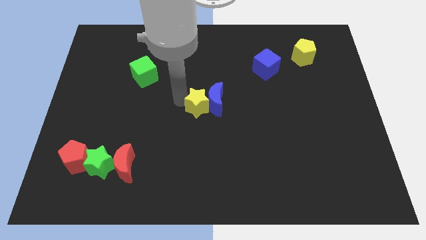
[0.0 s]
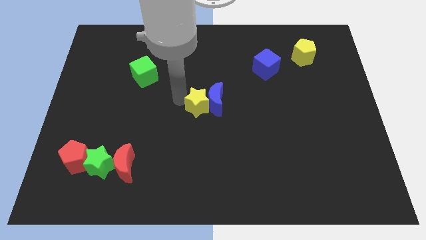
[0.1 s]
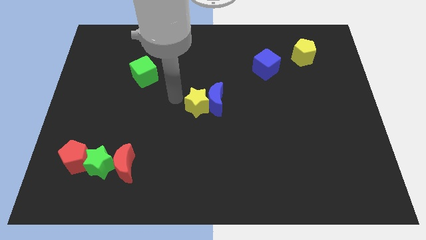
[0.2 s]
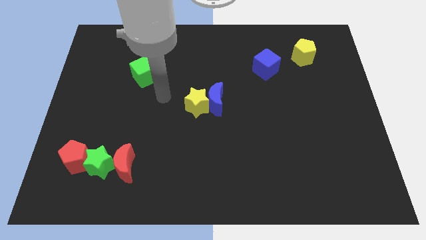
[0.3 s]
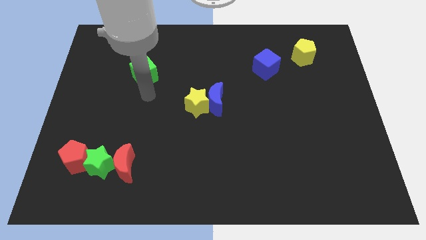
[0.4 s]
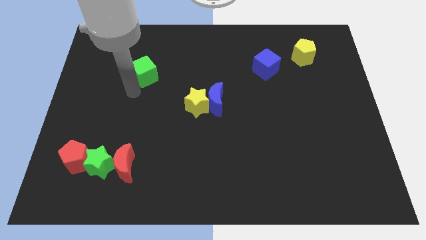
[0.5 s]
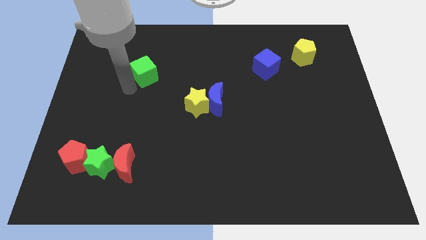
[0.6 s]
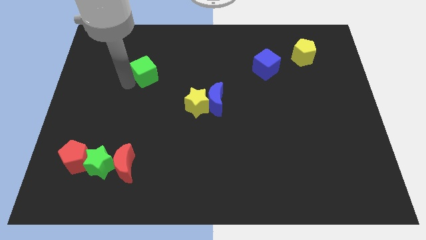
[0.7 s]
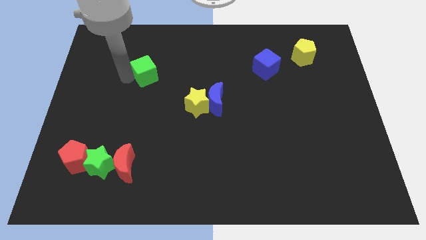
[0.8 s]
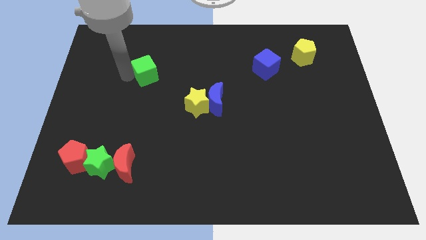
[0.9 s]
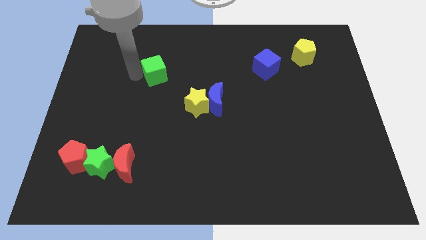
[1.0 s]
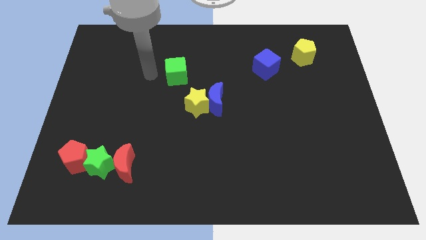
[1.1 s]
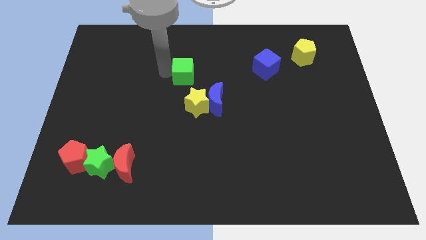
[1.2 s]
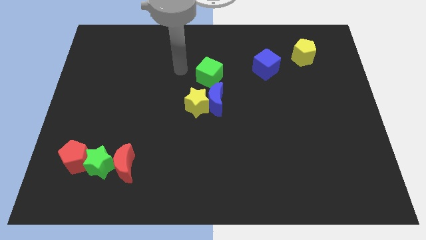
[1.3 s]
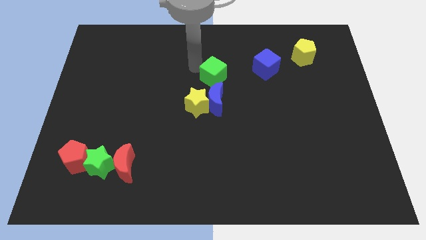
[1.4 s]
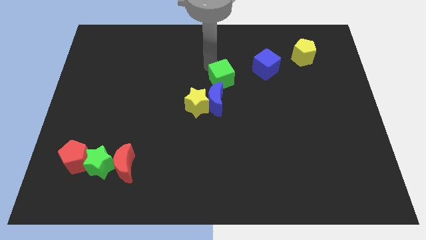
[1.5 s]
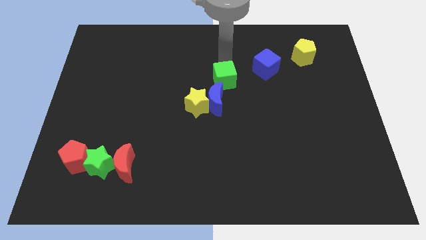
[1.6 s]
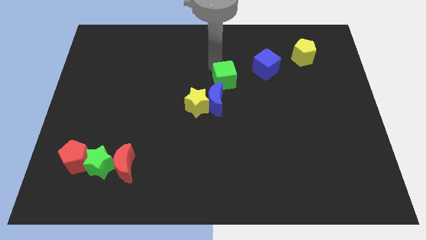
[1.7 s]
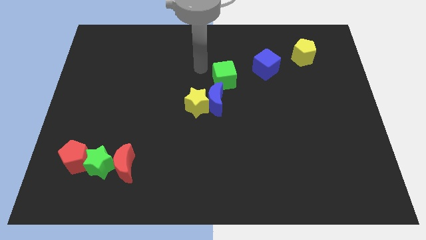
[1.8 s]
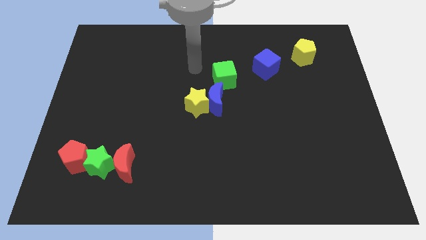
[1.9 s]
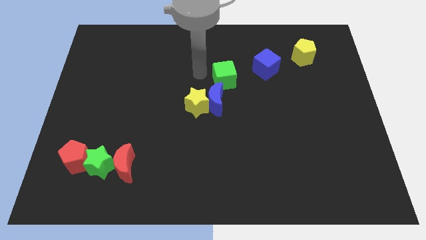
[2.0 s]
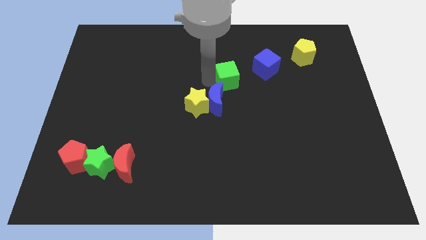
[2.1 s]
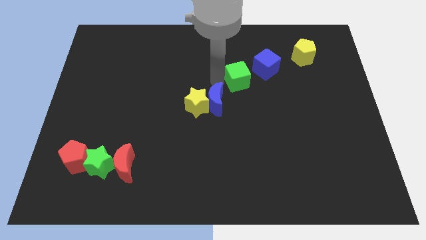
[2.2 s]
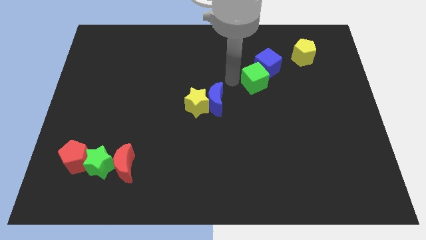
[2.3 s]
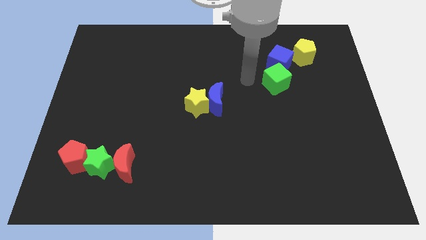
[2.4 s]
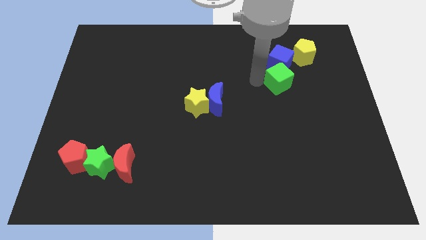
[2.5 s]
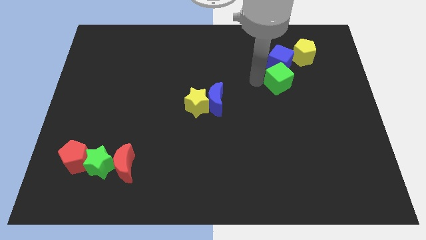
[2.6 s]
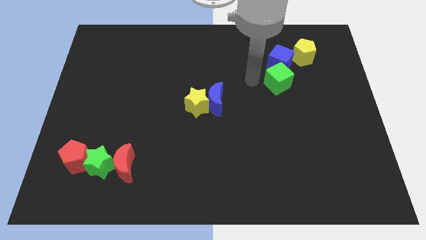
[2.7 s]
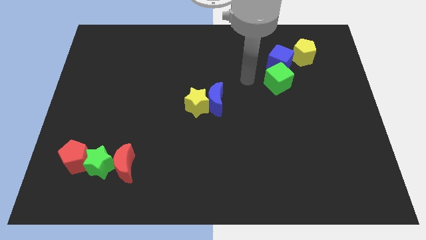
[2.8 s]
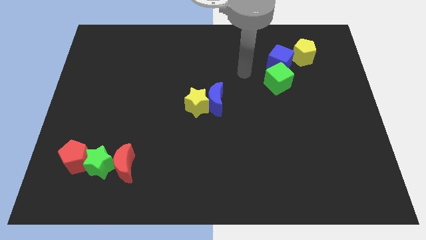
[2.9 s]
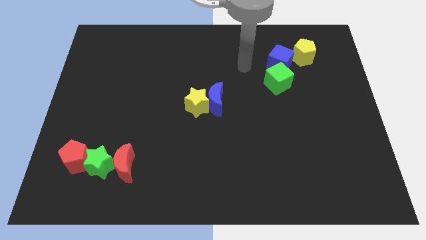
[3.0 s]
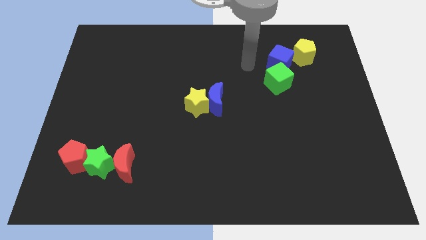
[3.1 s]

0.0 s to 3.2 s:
move the green cube to the bottom of the blue cube

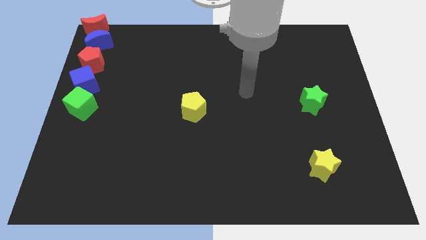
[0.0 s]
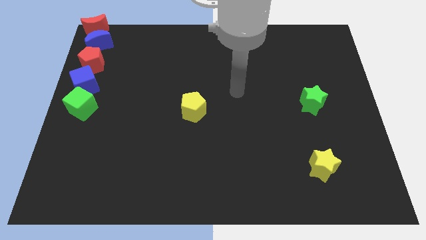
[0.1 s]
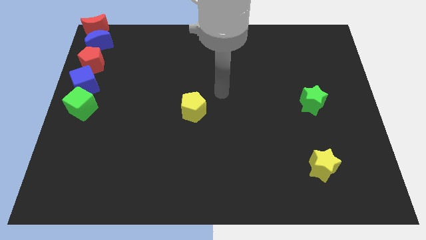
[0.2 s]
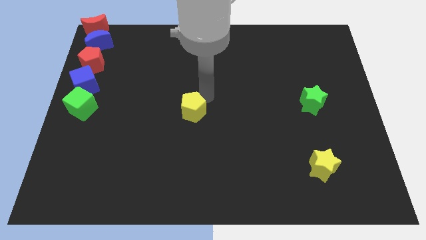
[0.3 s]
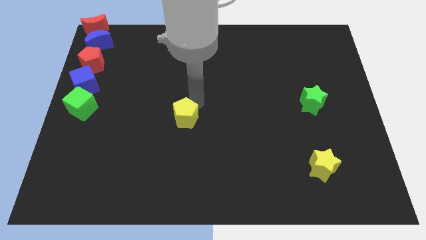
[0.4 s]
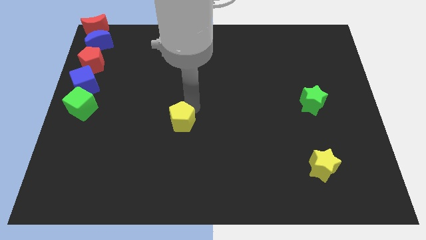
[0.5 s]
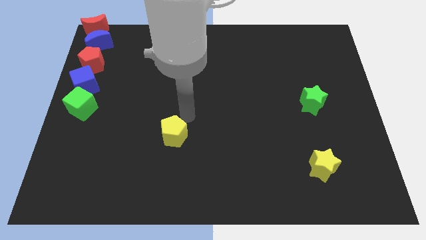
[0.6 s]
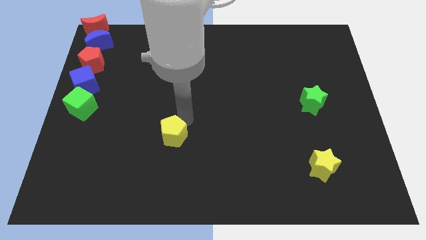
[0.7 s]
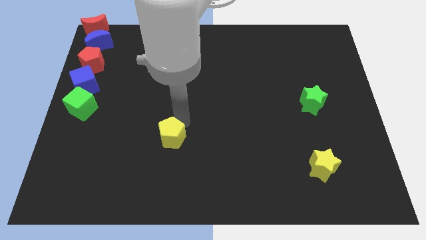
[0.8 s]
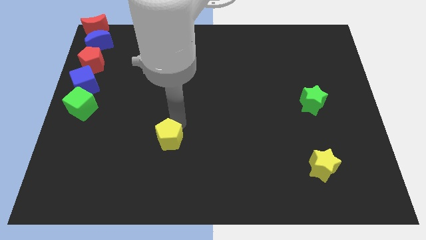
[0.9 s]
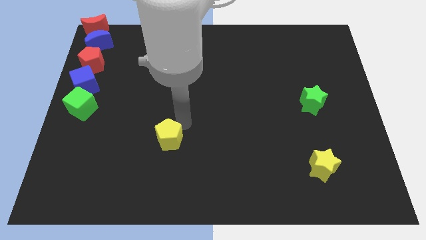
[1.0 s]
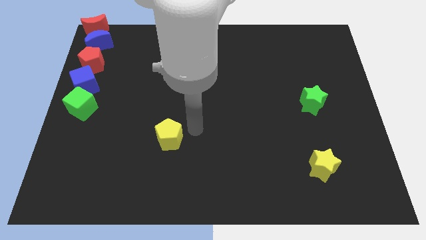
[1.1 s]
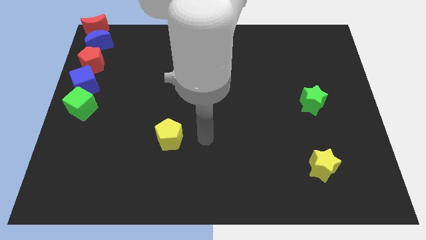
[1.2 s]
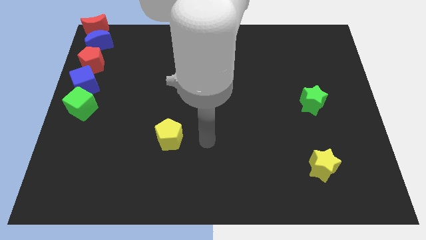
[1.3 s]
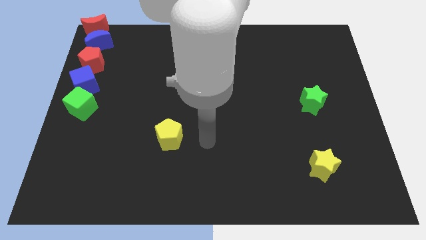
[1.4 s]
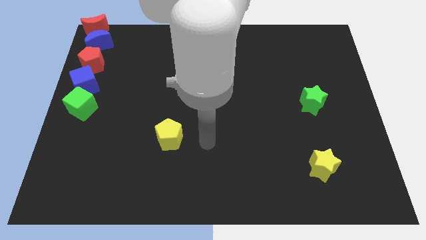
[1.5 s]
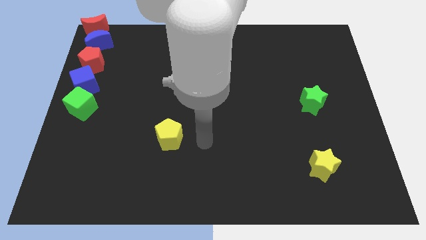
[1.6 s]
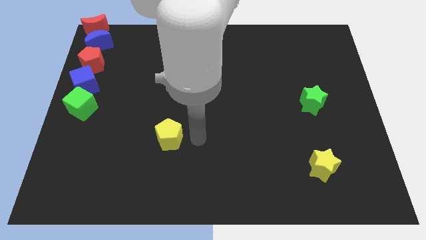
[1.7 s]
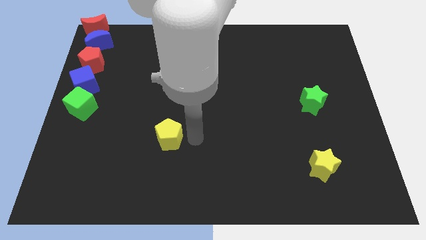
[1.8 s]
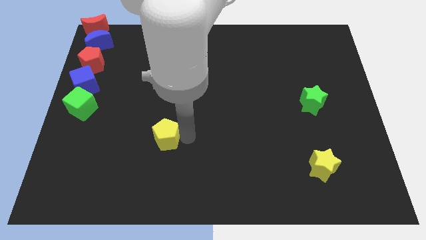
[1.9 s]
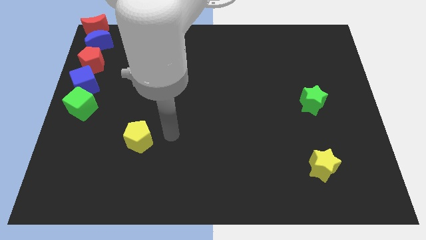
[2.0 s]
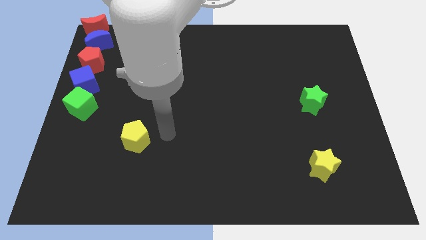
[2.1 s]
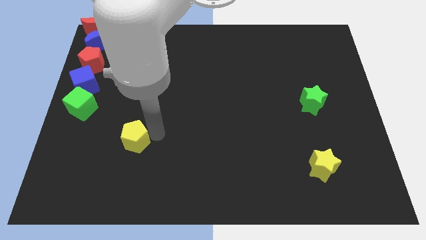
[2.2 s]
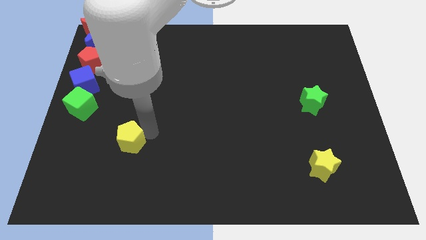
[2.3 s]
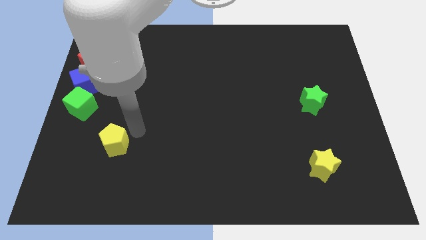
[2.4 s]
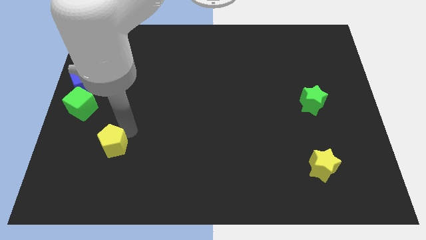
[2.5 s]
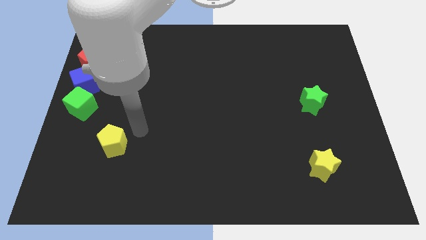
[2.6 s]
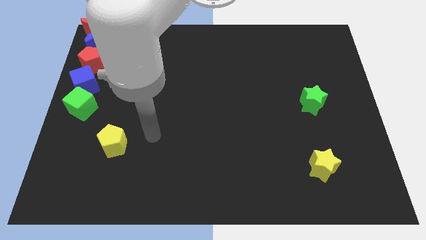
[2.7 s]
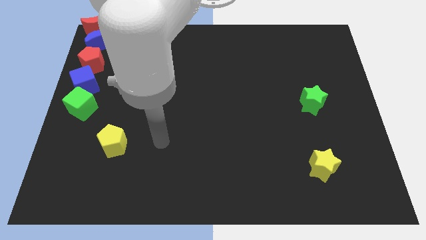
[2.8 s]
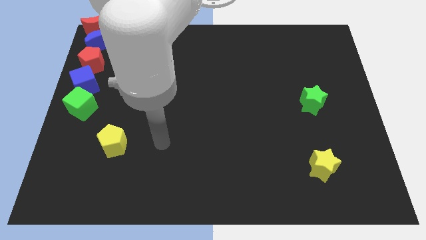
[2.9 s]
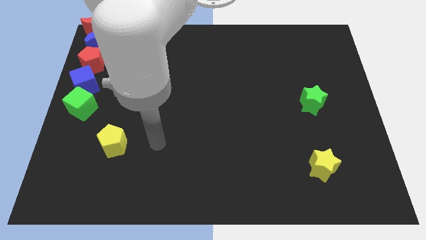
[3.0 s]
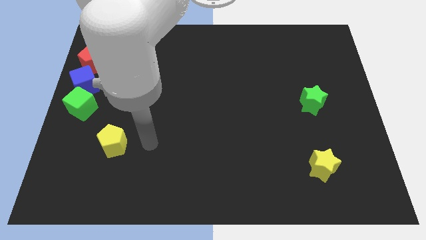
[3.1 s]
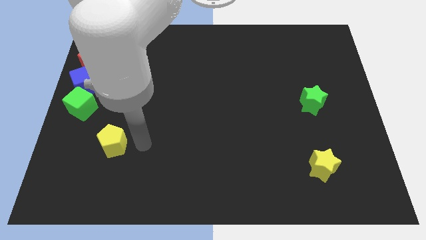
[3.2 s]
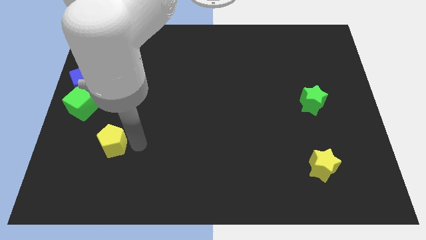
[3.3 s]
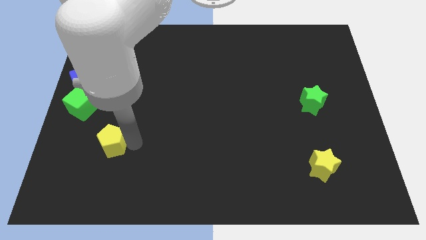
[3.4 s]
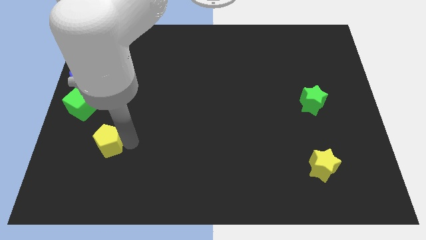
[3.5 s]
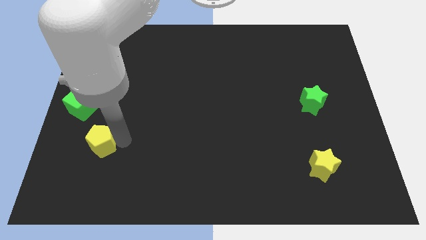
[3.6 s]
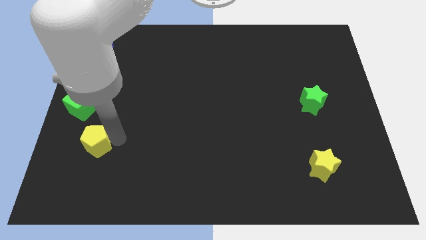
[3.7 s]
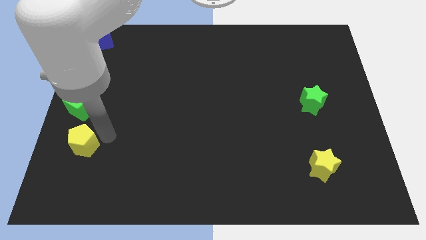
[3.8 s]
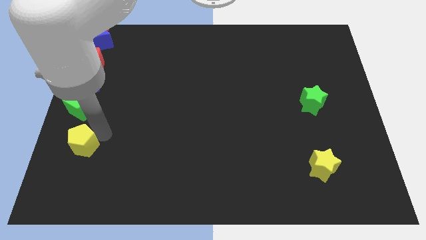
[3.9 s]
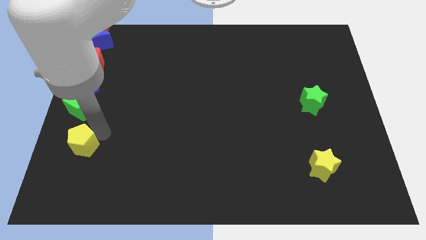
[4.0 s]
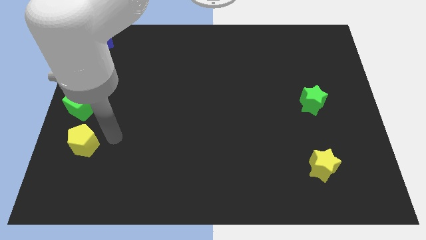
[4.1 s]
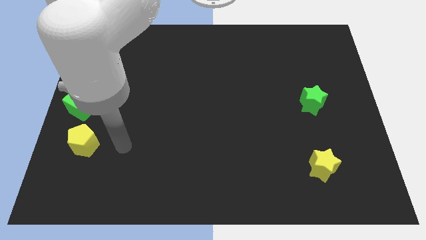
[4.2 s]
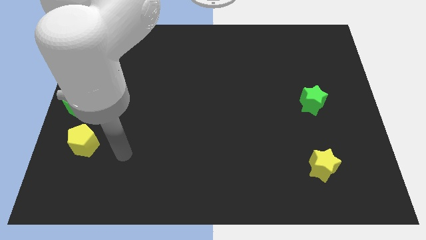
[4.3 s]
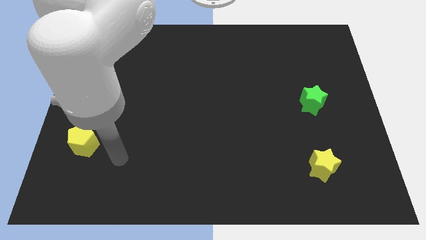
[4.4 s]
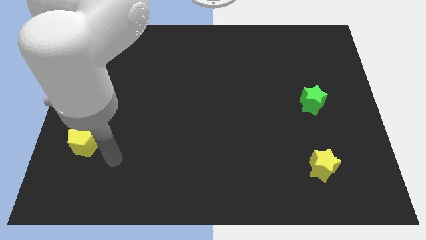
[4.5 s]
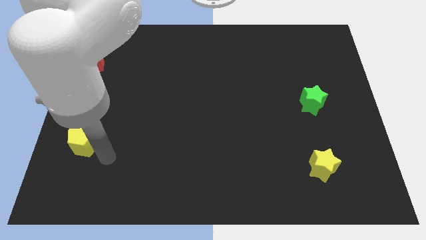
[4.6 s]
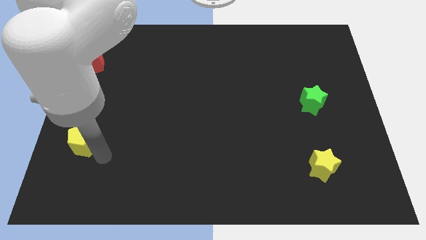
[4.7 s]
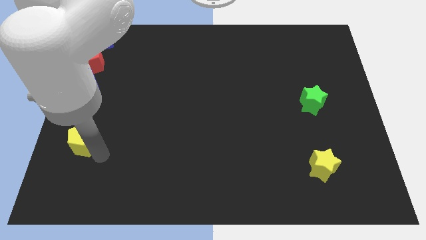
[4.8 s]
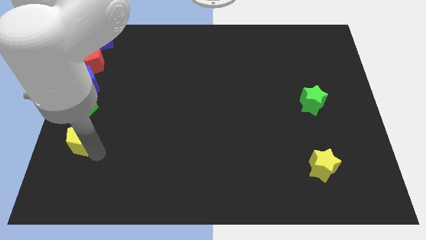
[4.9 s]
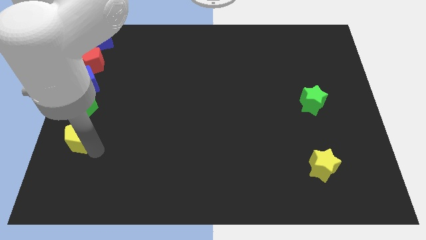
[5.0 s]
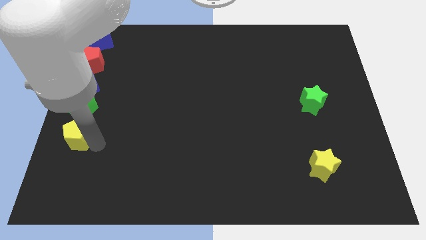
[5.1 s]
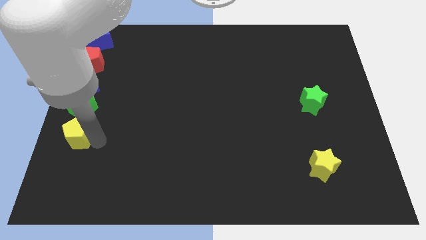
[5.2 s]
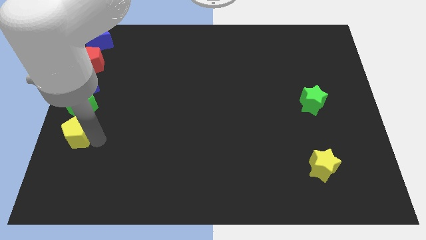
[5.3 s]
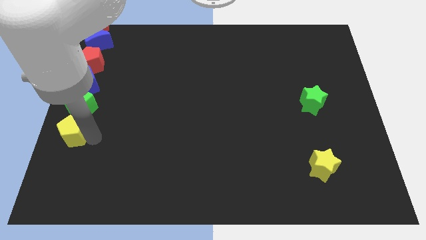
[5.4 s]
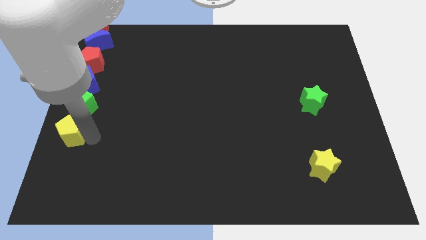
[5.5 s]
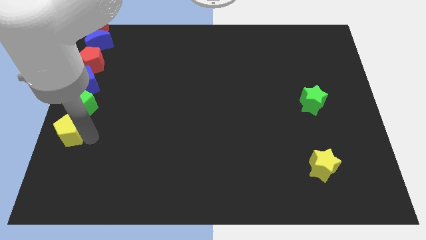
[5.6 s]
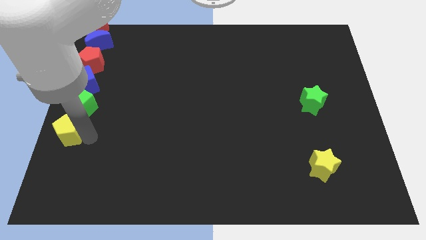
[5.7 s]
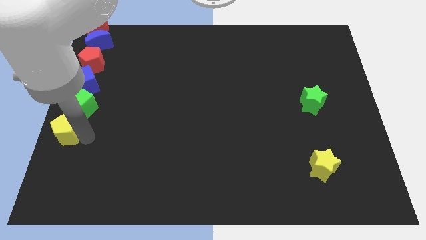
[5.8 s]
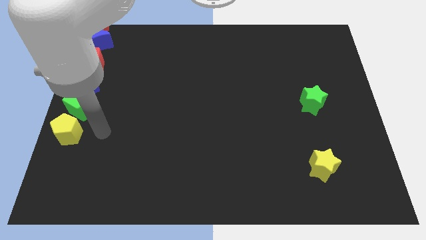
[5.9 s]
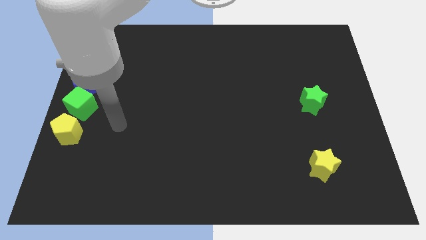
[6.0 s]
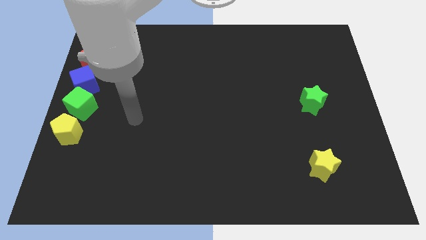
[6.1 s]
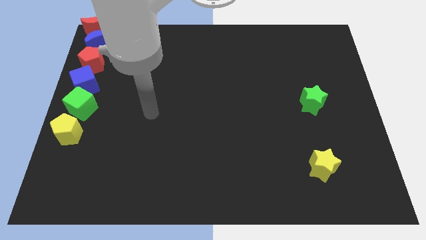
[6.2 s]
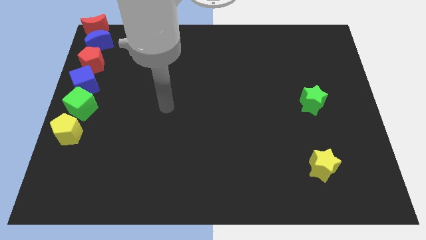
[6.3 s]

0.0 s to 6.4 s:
place yellow pentagon down to the green cube
